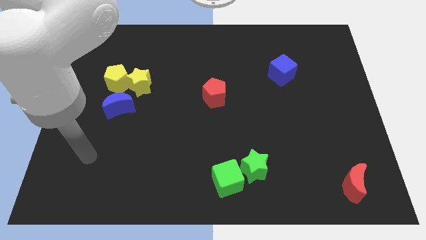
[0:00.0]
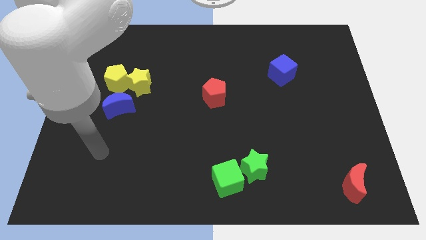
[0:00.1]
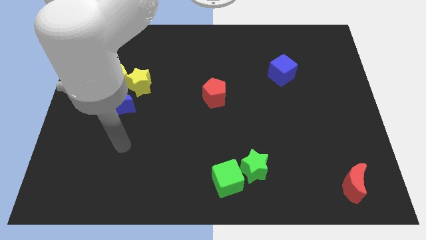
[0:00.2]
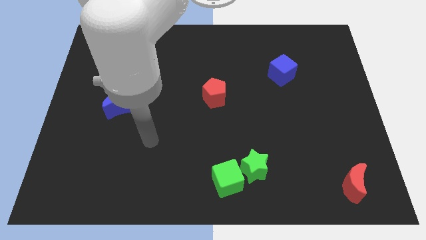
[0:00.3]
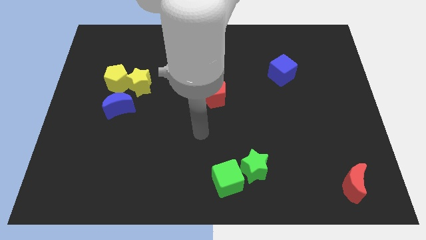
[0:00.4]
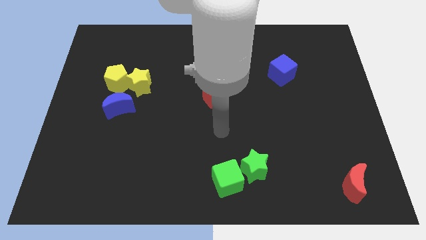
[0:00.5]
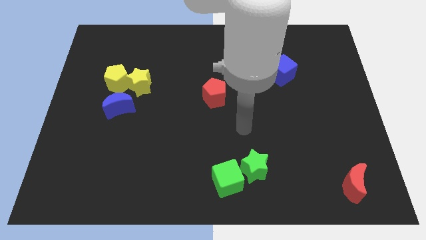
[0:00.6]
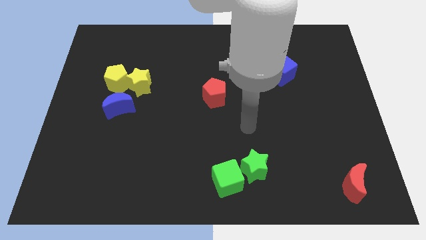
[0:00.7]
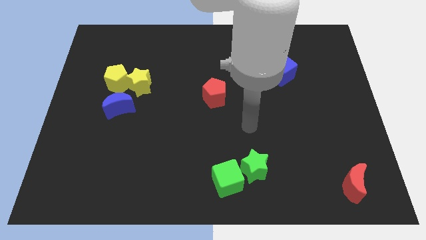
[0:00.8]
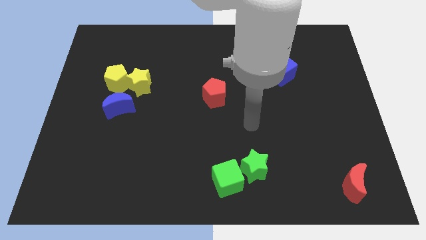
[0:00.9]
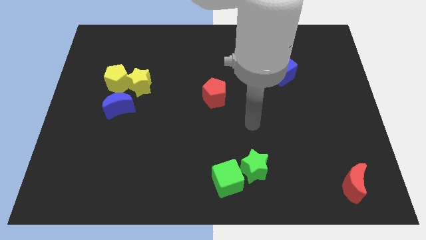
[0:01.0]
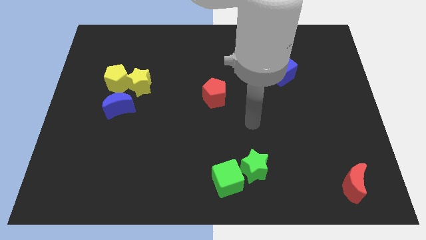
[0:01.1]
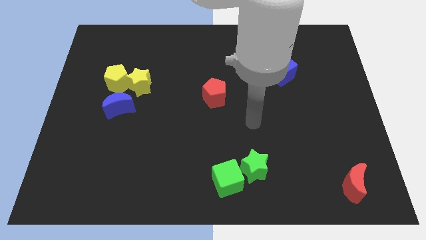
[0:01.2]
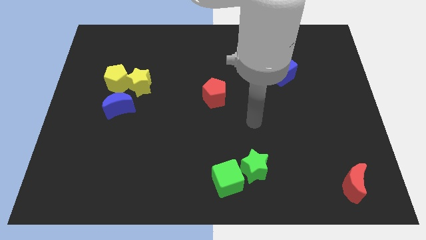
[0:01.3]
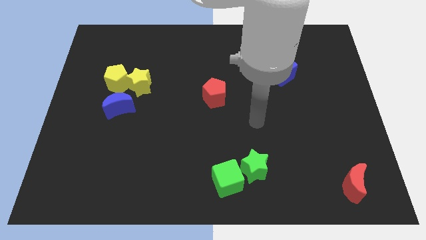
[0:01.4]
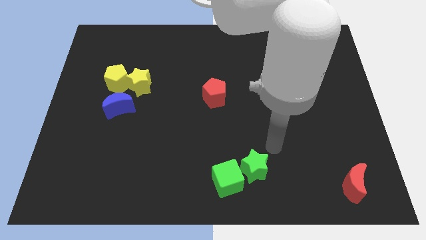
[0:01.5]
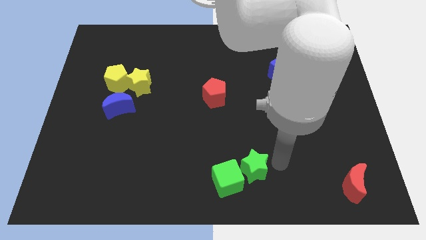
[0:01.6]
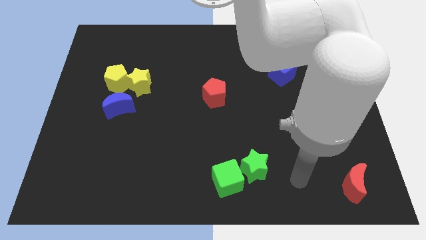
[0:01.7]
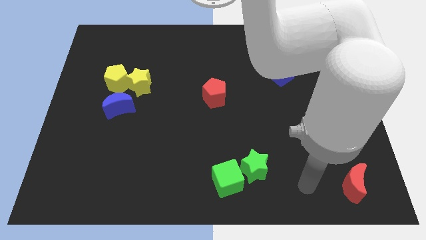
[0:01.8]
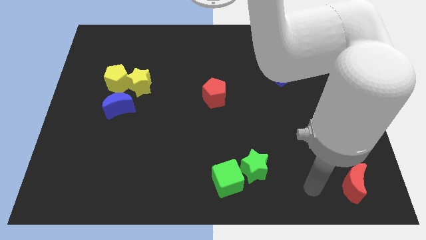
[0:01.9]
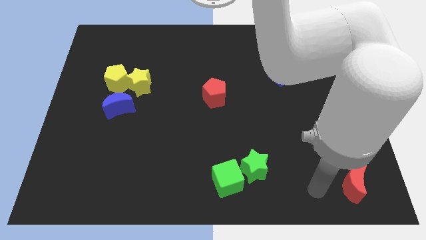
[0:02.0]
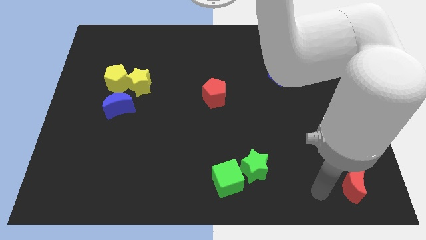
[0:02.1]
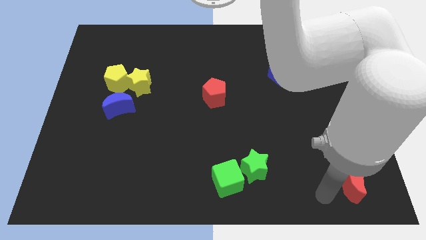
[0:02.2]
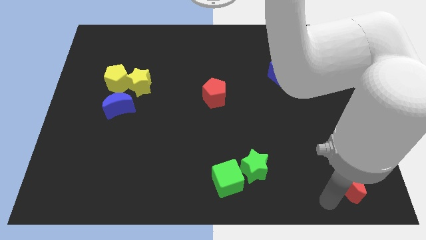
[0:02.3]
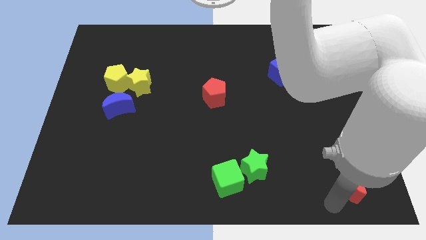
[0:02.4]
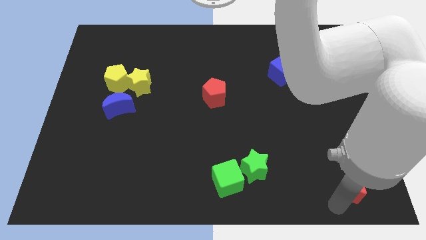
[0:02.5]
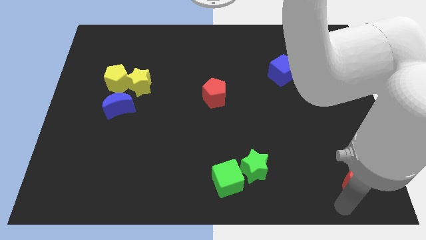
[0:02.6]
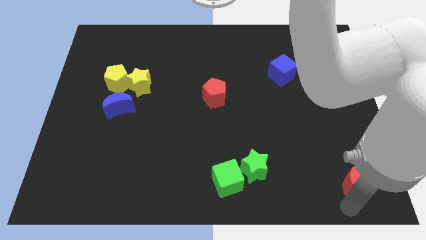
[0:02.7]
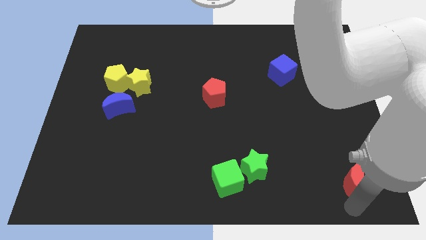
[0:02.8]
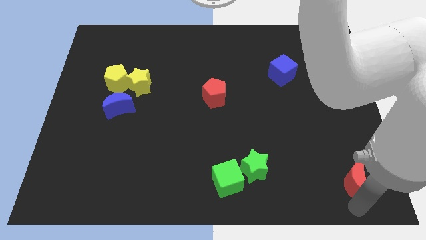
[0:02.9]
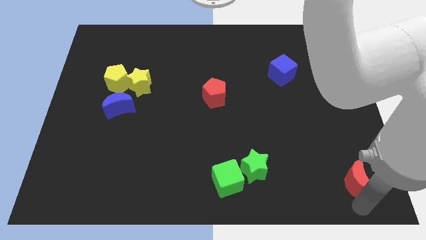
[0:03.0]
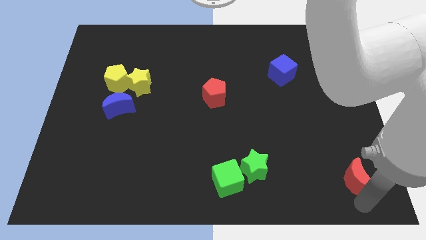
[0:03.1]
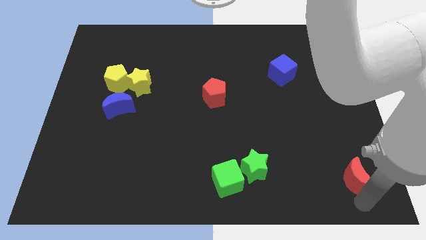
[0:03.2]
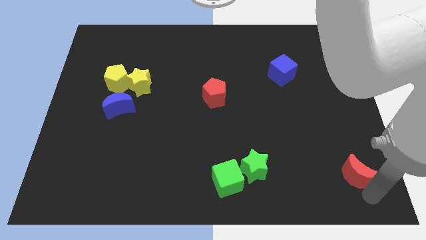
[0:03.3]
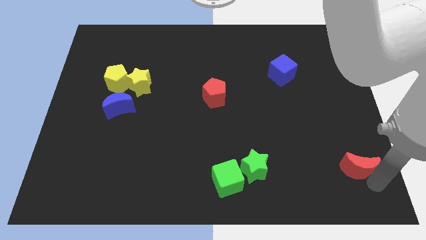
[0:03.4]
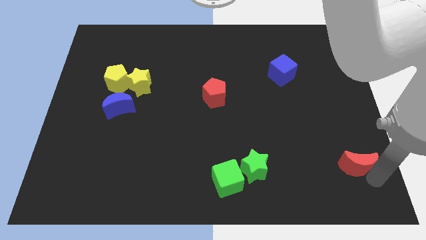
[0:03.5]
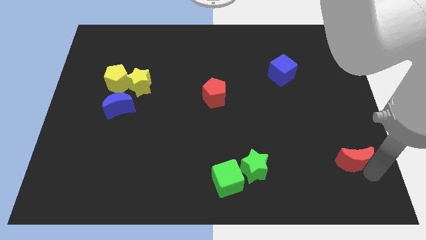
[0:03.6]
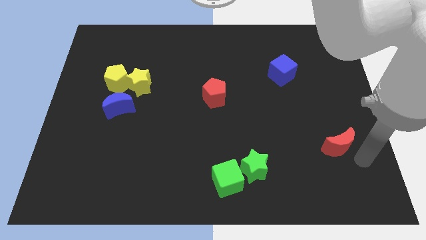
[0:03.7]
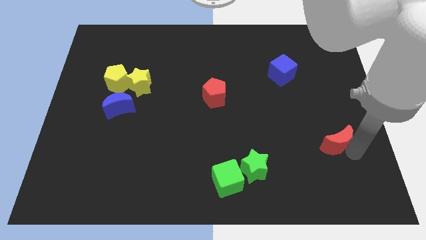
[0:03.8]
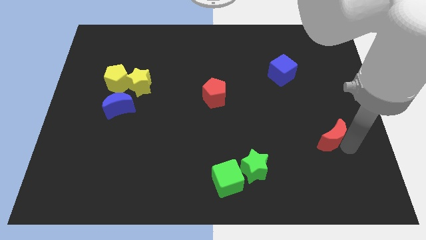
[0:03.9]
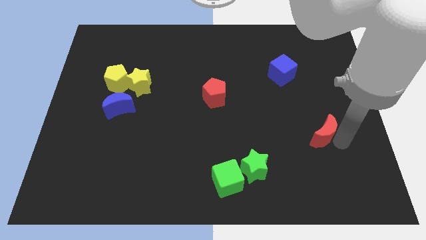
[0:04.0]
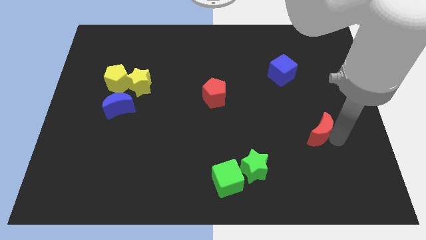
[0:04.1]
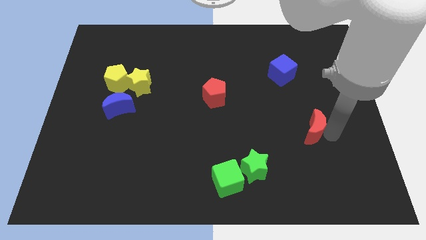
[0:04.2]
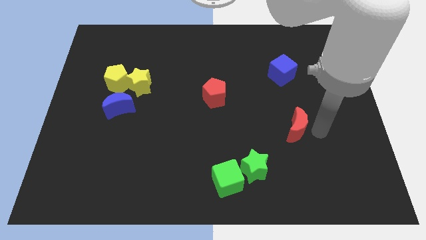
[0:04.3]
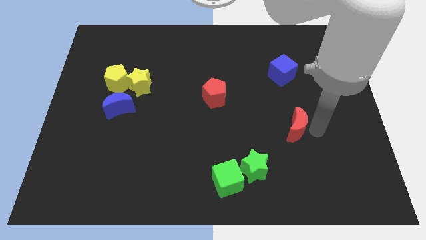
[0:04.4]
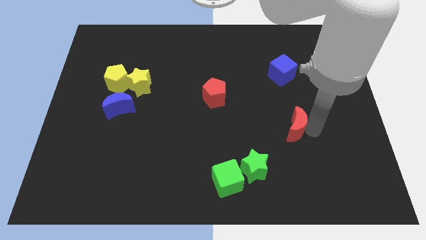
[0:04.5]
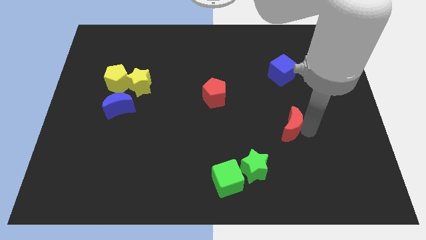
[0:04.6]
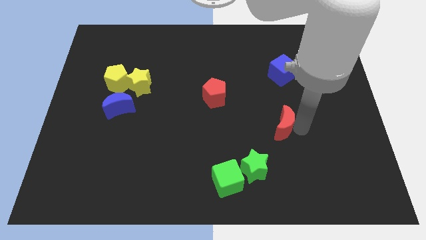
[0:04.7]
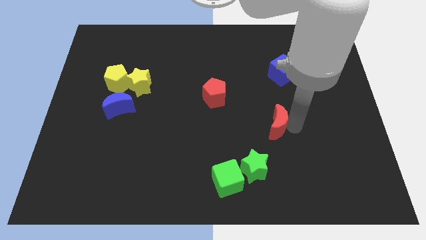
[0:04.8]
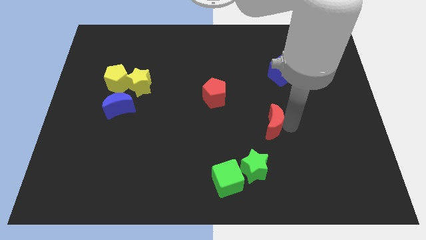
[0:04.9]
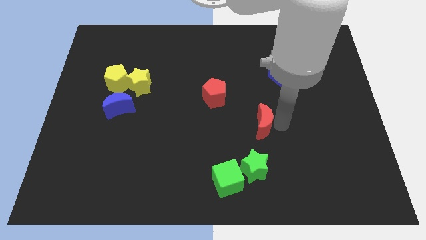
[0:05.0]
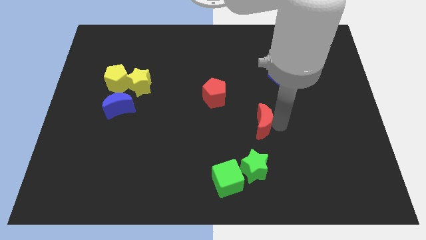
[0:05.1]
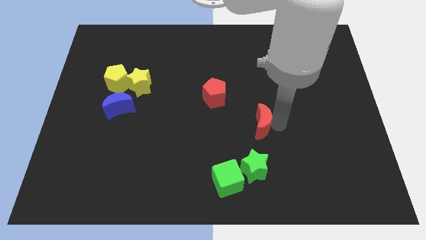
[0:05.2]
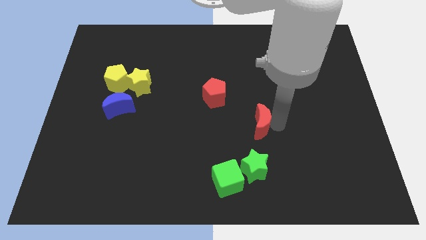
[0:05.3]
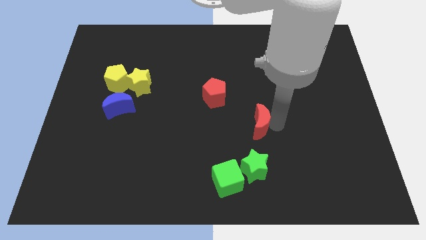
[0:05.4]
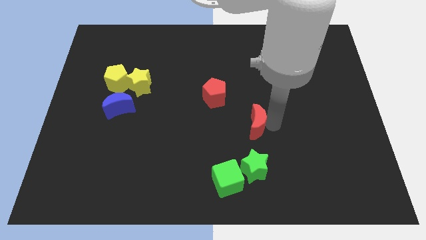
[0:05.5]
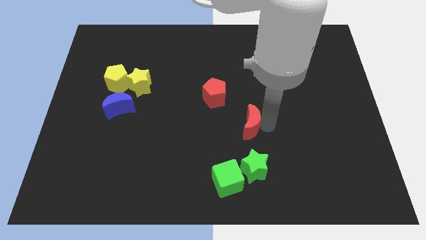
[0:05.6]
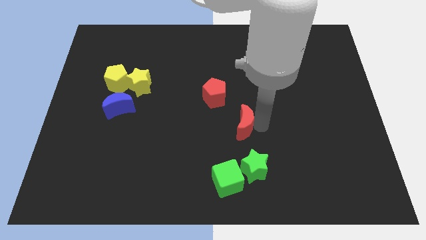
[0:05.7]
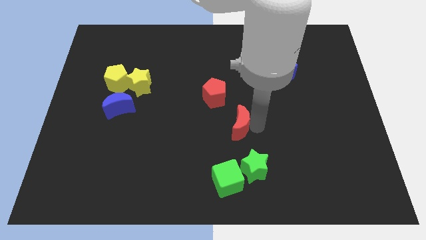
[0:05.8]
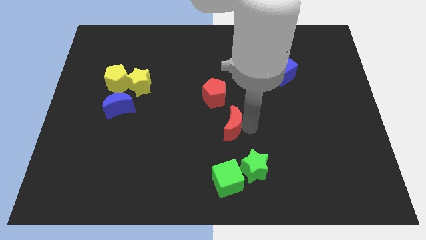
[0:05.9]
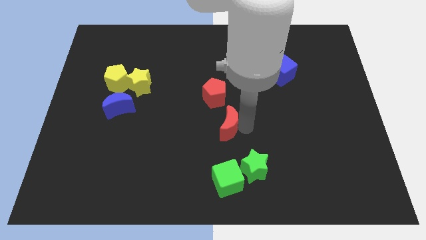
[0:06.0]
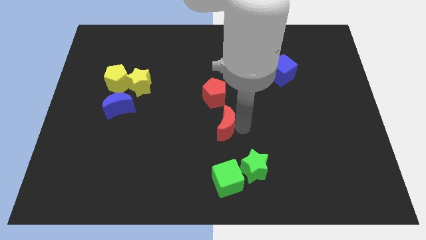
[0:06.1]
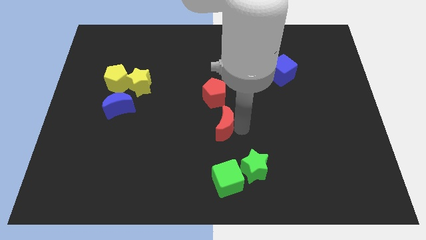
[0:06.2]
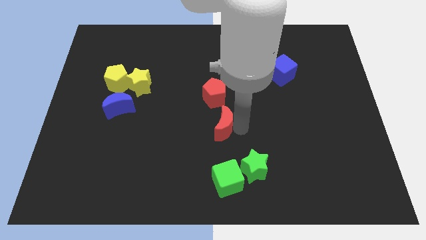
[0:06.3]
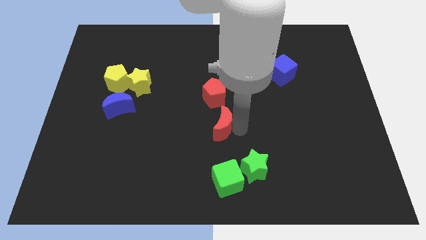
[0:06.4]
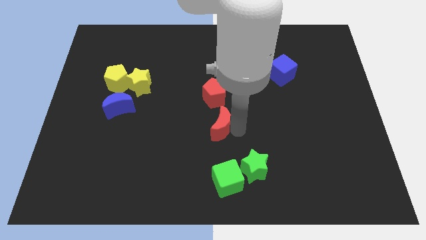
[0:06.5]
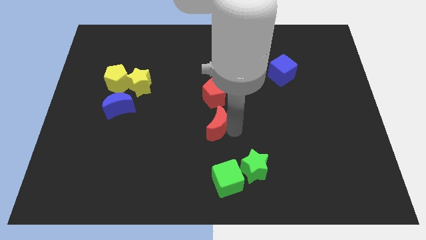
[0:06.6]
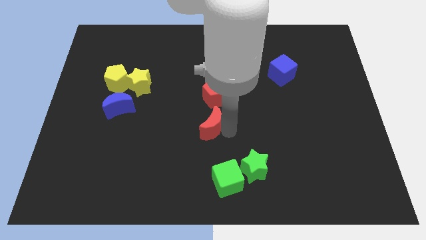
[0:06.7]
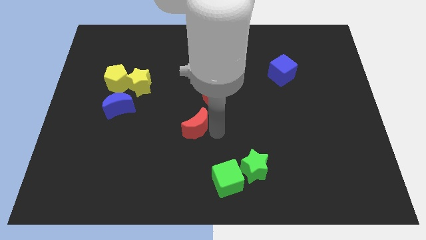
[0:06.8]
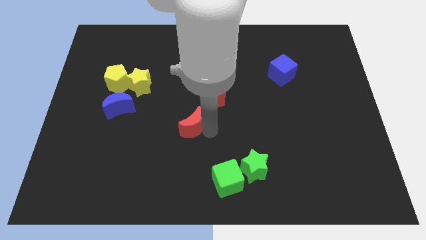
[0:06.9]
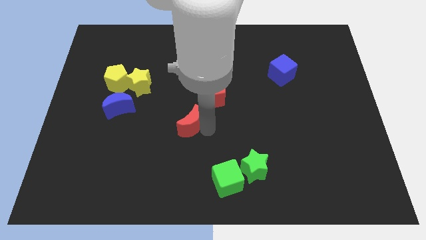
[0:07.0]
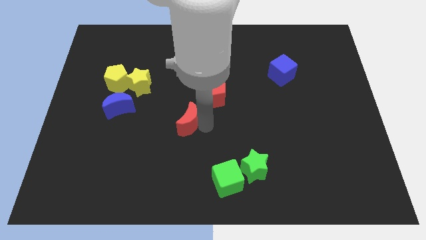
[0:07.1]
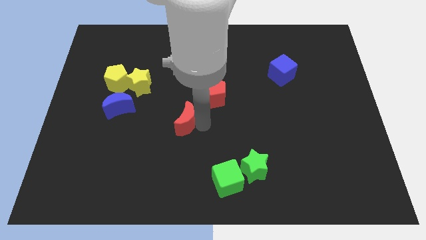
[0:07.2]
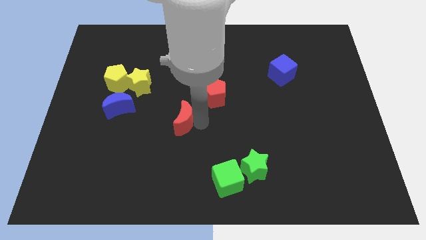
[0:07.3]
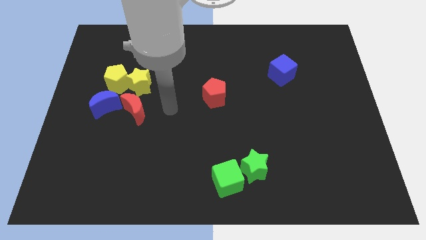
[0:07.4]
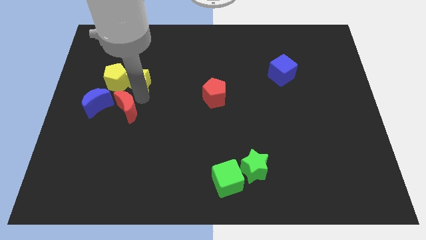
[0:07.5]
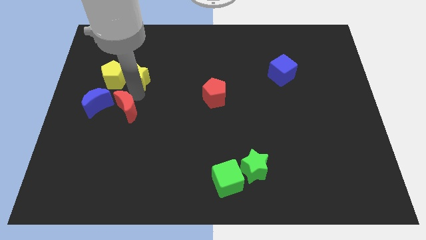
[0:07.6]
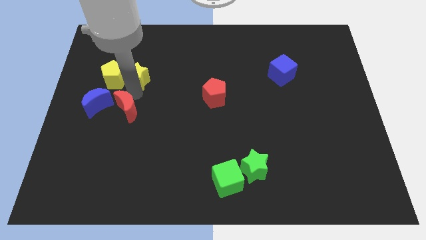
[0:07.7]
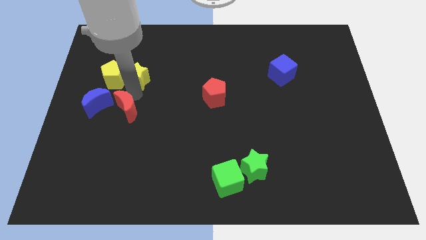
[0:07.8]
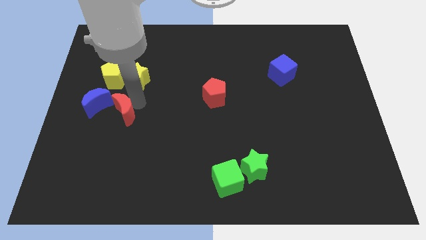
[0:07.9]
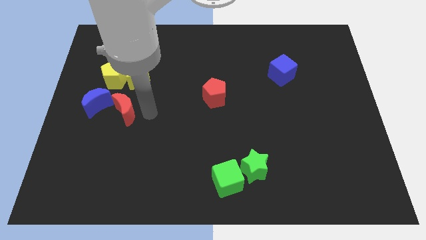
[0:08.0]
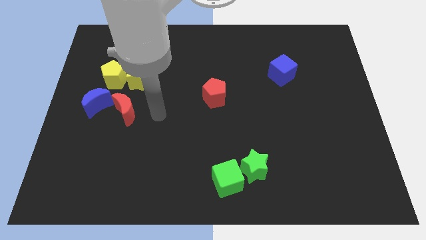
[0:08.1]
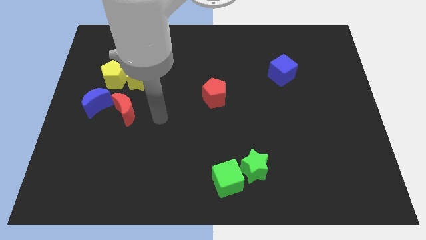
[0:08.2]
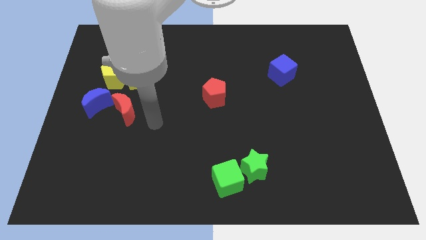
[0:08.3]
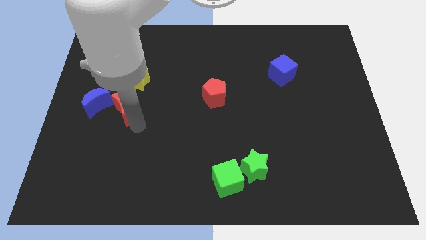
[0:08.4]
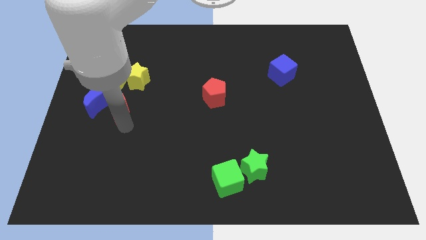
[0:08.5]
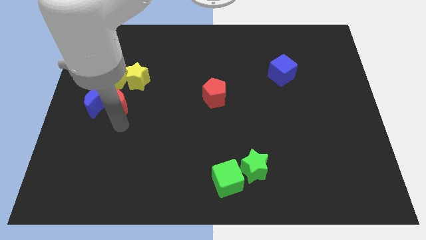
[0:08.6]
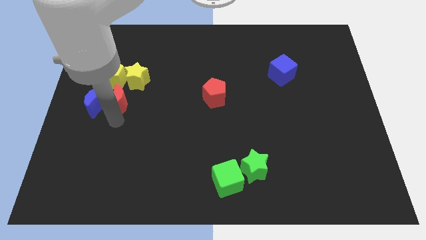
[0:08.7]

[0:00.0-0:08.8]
put the red moon to the blue moon
